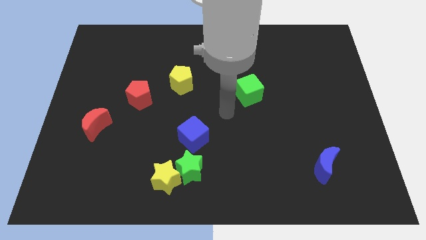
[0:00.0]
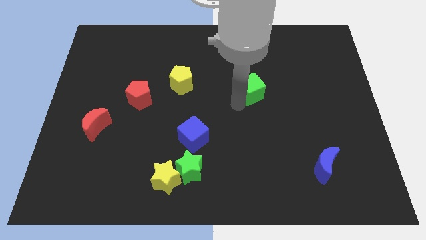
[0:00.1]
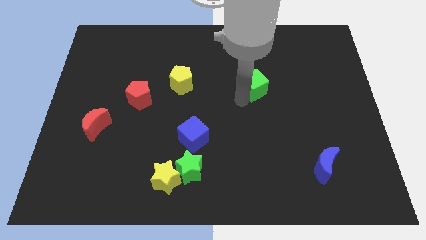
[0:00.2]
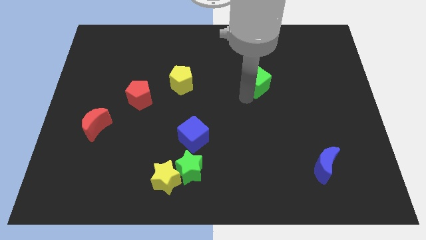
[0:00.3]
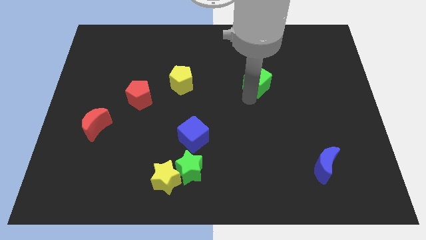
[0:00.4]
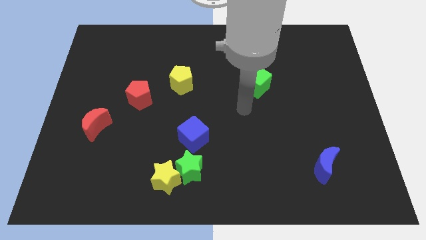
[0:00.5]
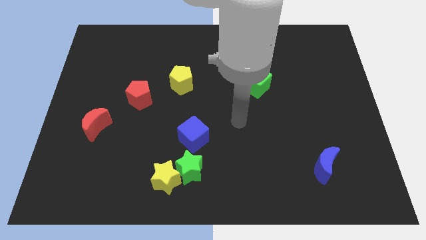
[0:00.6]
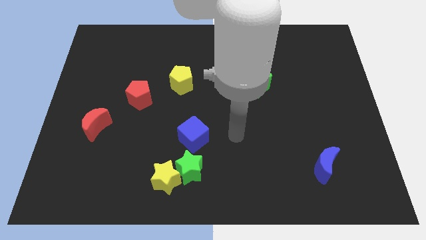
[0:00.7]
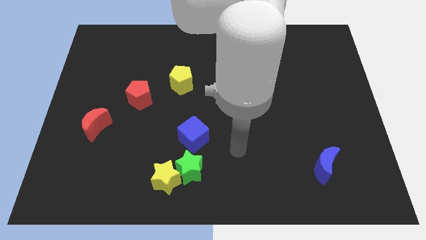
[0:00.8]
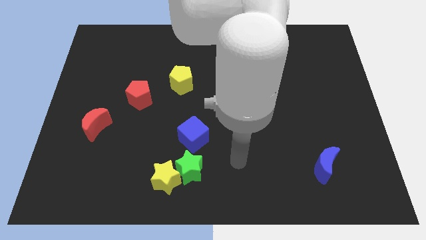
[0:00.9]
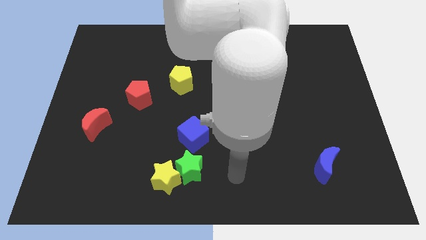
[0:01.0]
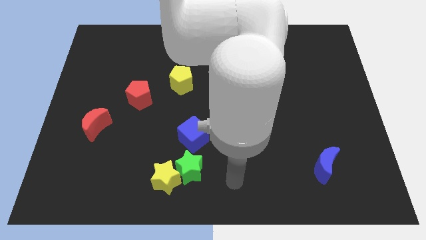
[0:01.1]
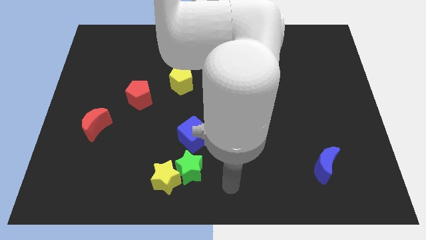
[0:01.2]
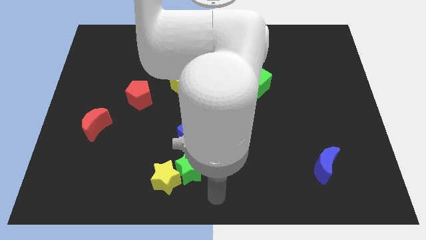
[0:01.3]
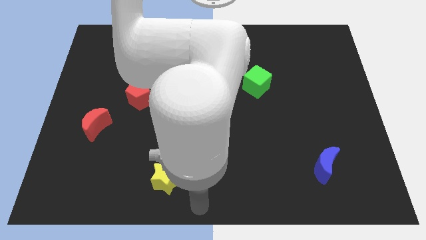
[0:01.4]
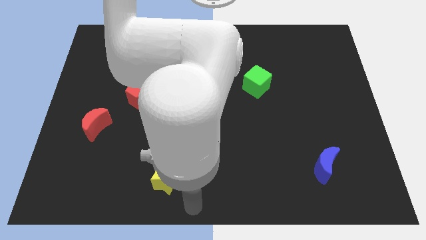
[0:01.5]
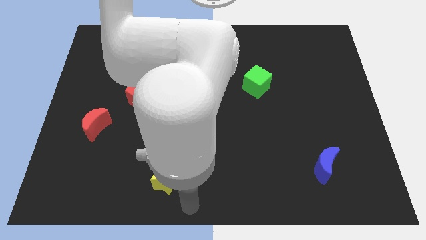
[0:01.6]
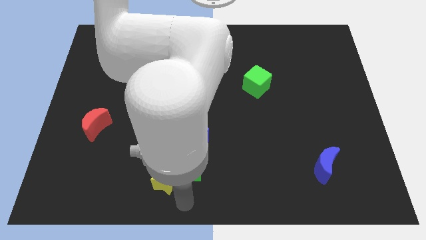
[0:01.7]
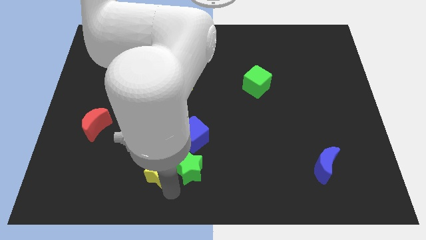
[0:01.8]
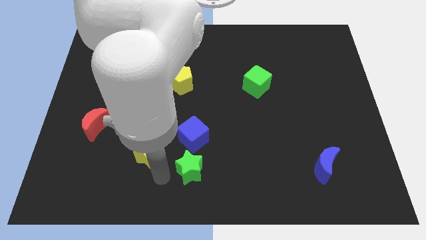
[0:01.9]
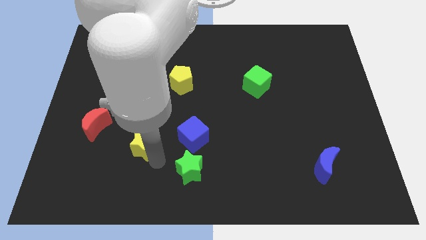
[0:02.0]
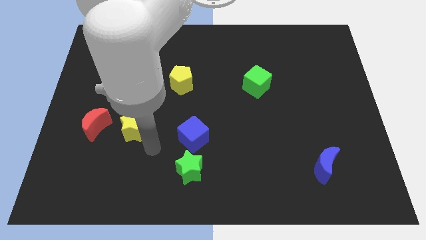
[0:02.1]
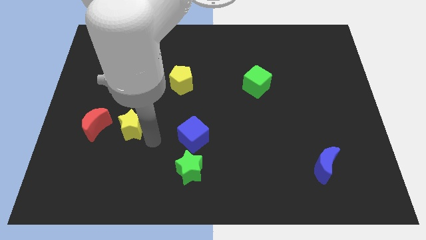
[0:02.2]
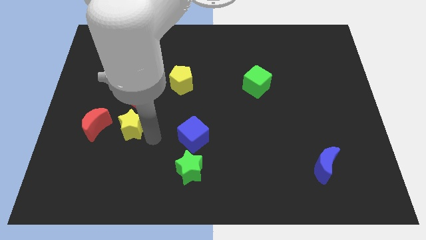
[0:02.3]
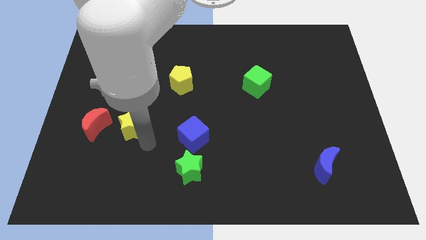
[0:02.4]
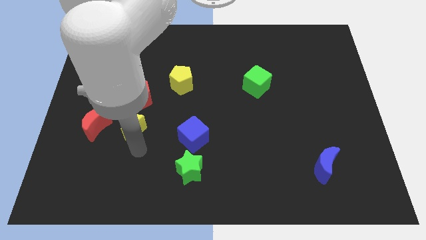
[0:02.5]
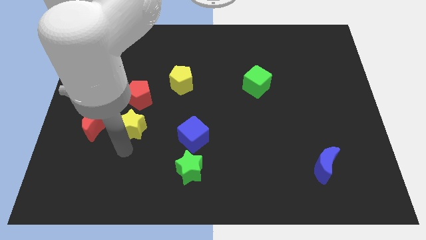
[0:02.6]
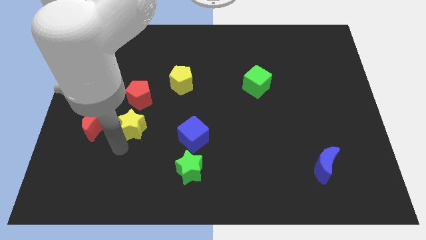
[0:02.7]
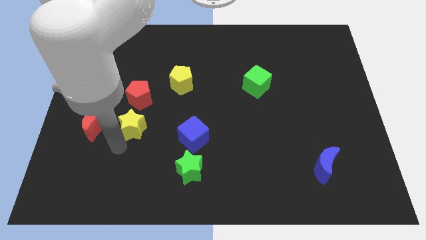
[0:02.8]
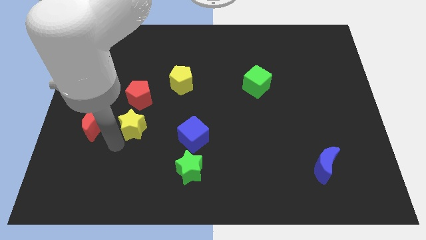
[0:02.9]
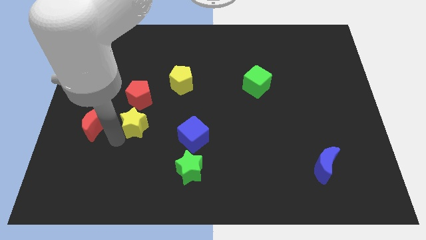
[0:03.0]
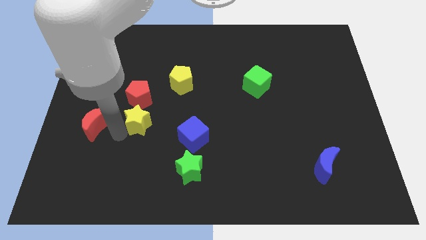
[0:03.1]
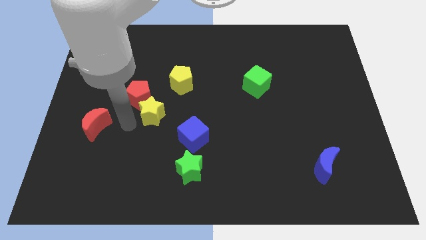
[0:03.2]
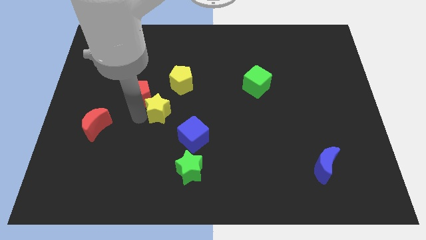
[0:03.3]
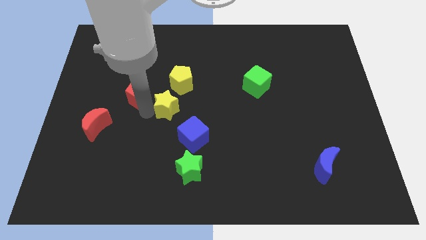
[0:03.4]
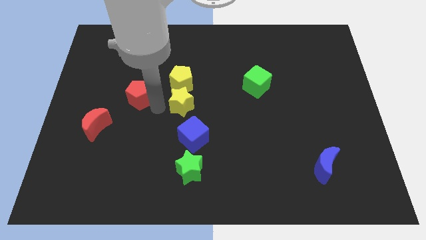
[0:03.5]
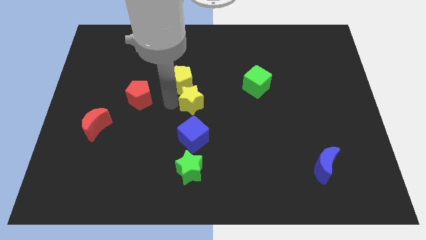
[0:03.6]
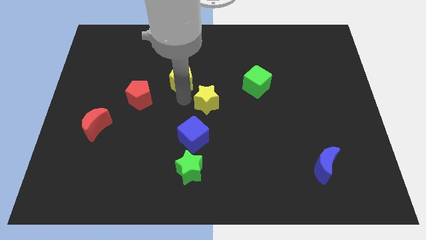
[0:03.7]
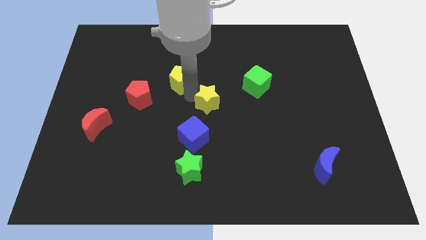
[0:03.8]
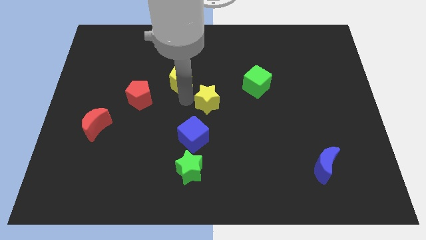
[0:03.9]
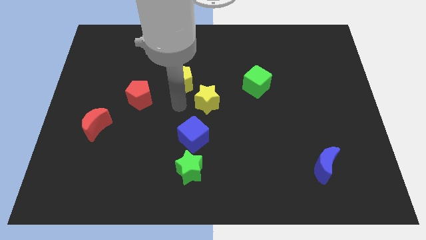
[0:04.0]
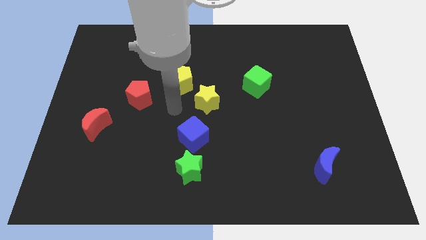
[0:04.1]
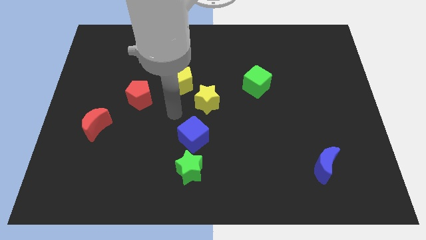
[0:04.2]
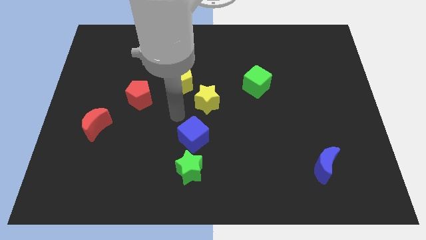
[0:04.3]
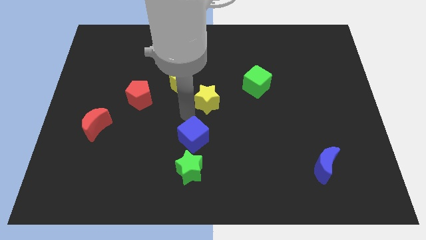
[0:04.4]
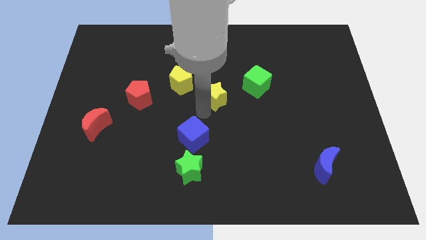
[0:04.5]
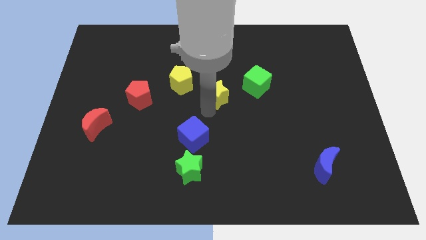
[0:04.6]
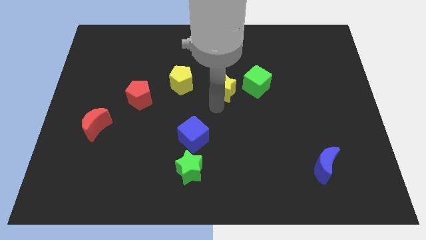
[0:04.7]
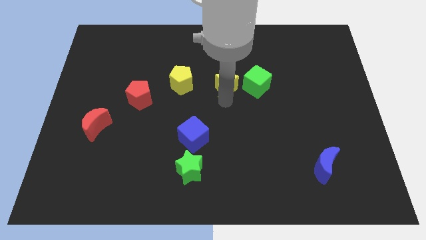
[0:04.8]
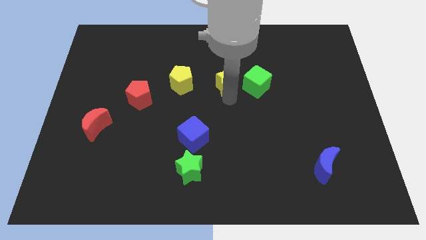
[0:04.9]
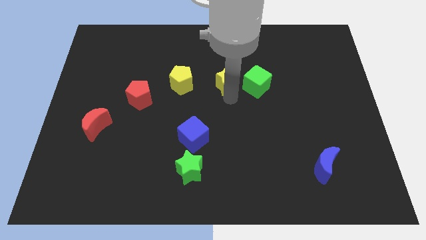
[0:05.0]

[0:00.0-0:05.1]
slide yellow star left to the green cube

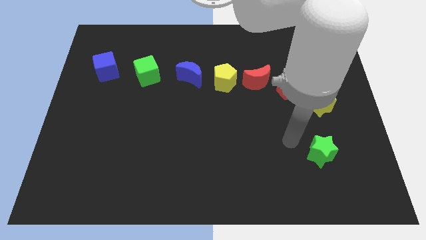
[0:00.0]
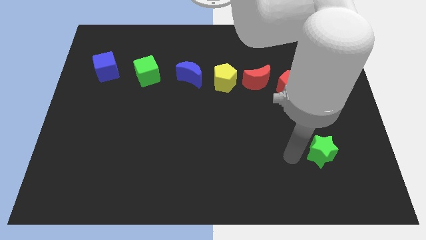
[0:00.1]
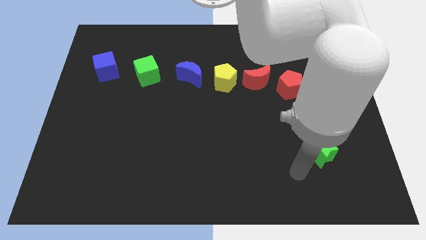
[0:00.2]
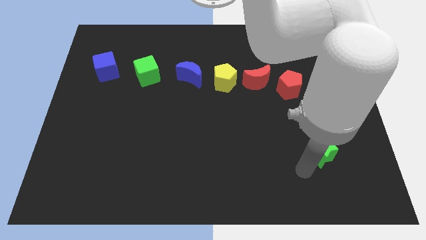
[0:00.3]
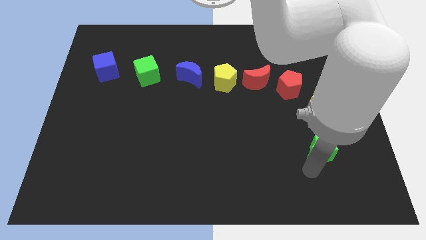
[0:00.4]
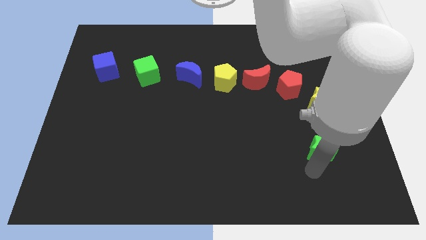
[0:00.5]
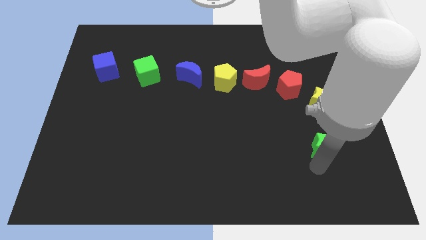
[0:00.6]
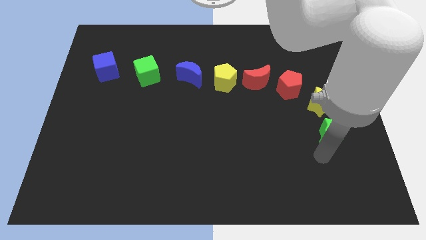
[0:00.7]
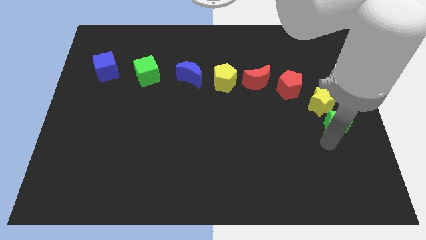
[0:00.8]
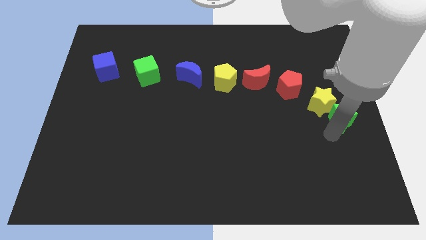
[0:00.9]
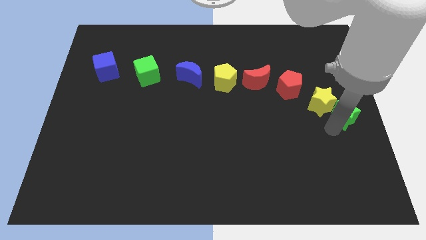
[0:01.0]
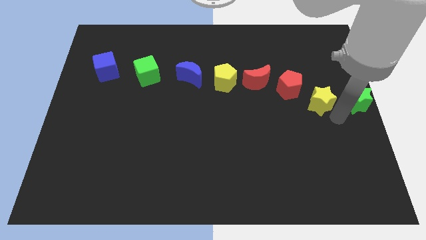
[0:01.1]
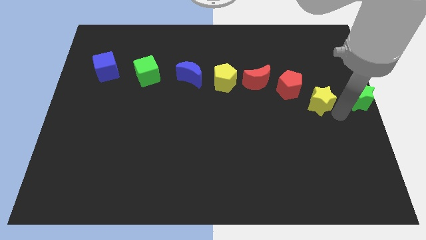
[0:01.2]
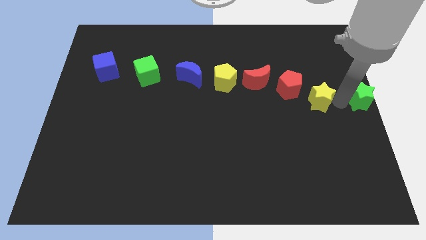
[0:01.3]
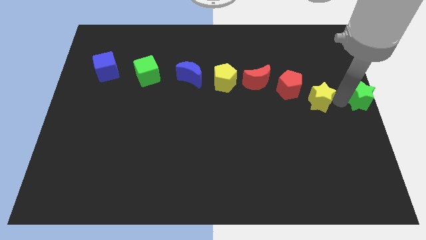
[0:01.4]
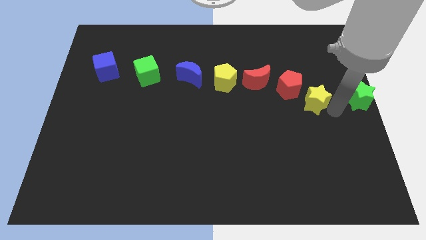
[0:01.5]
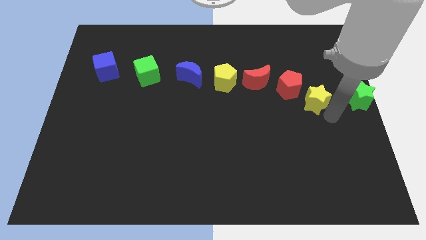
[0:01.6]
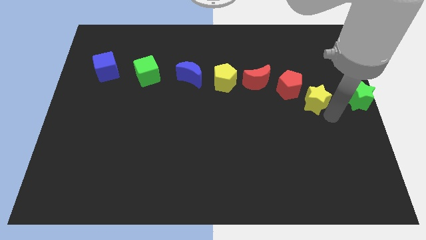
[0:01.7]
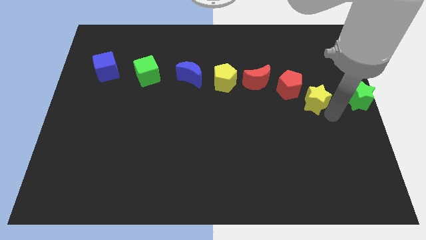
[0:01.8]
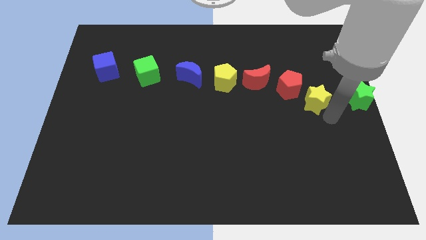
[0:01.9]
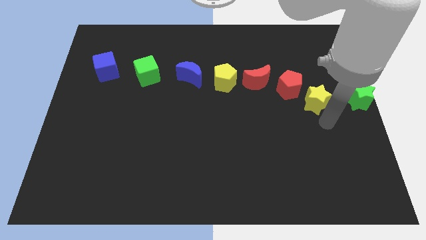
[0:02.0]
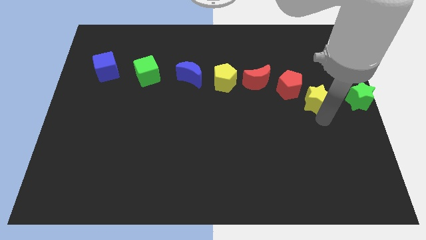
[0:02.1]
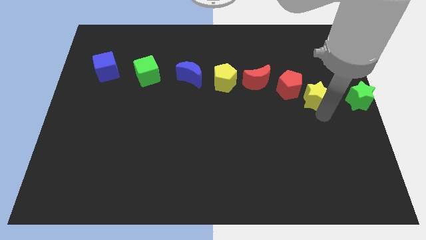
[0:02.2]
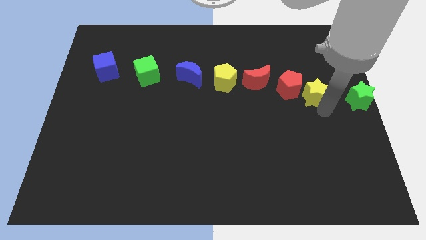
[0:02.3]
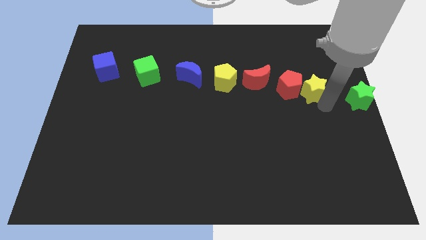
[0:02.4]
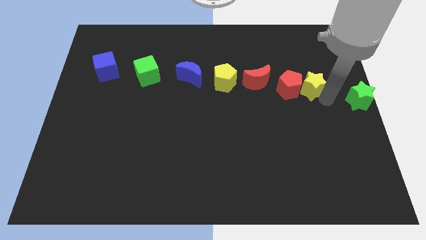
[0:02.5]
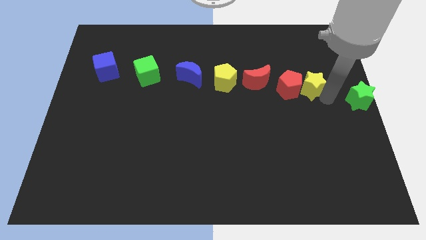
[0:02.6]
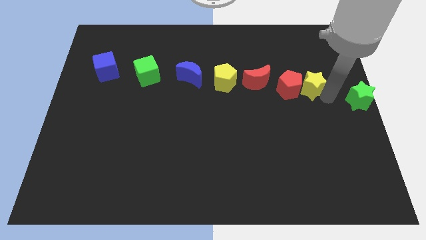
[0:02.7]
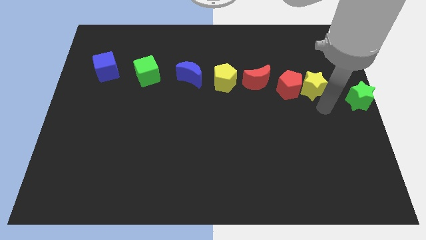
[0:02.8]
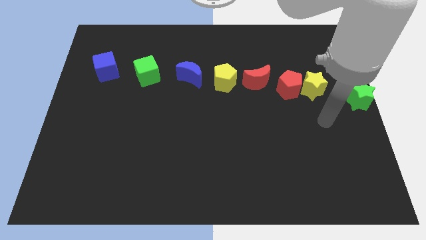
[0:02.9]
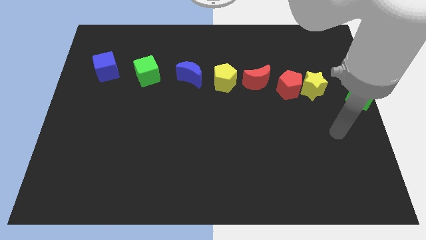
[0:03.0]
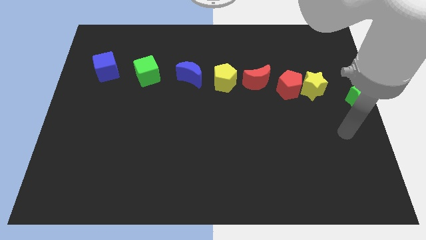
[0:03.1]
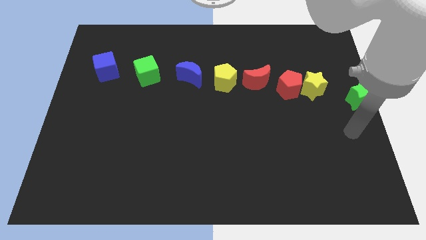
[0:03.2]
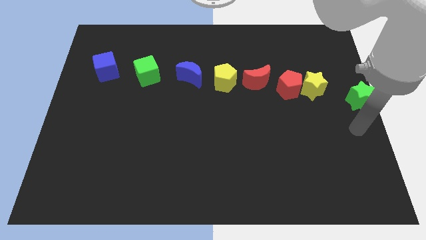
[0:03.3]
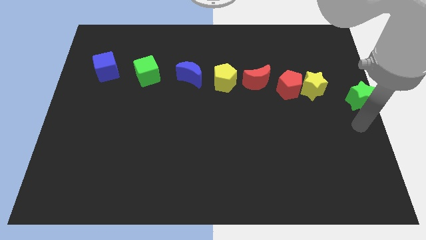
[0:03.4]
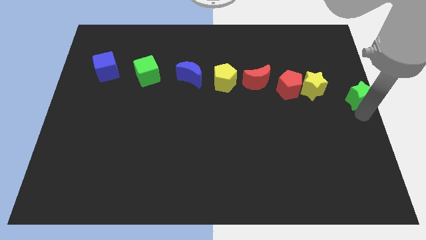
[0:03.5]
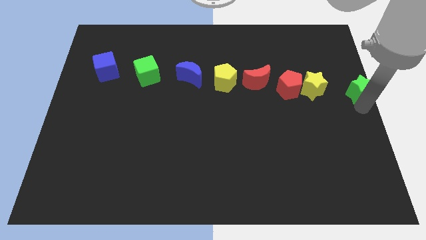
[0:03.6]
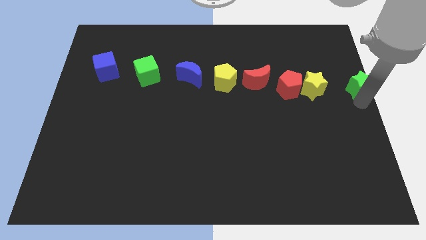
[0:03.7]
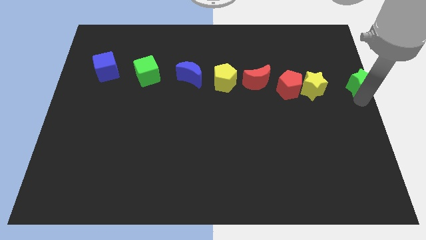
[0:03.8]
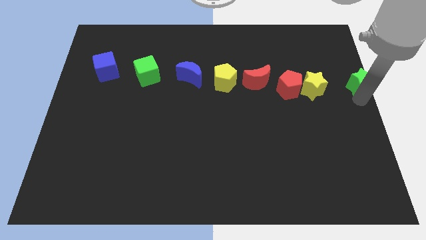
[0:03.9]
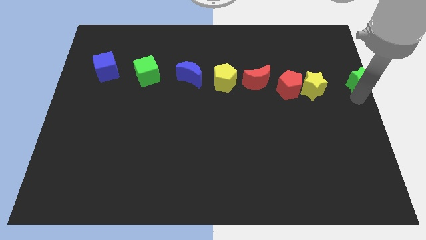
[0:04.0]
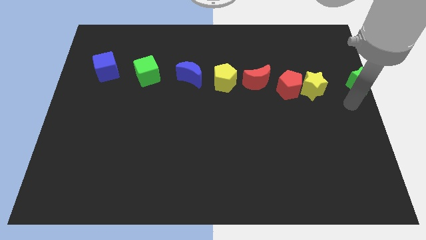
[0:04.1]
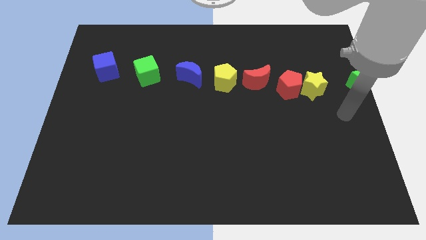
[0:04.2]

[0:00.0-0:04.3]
move green star to the center right side
